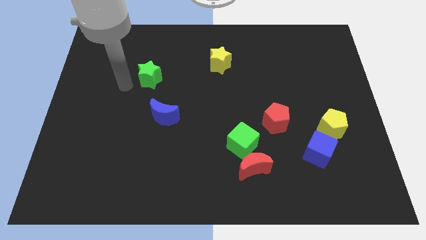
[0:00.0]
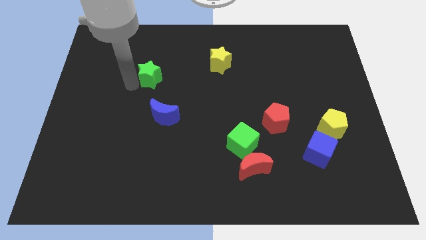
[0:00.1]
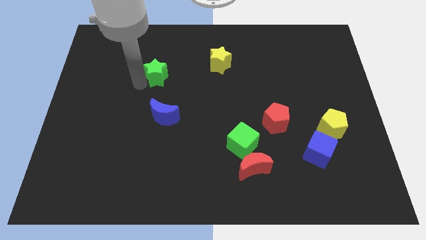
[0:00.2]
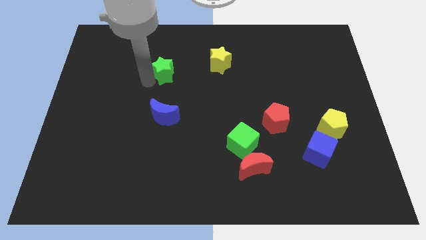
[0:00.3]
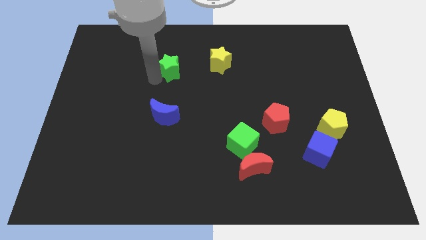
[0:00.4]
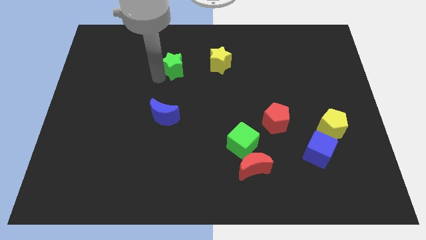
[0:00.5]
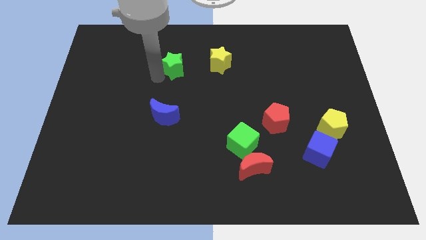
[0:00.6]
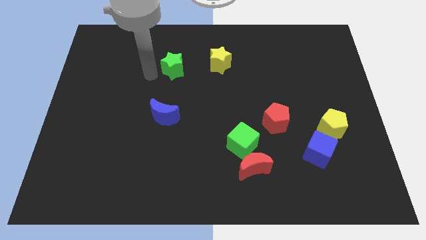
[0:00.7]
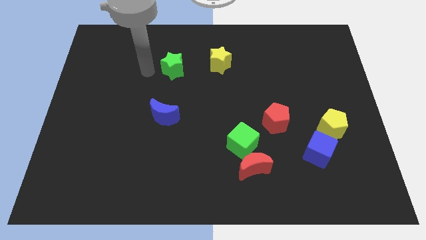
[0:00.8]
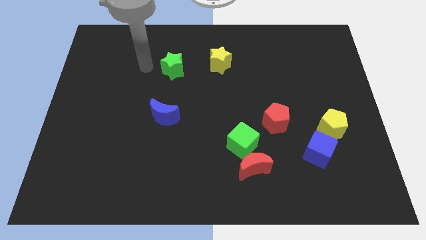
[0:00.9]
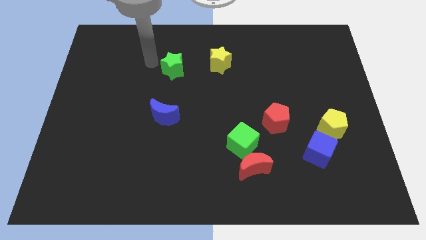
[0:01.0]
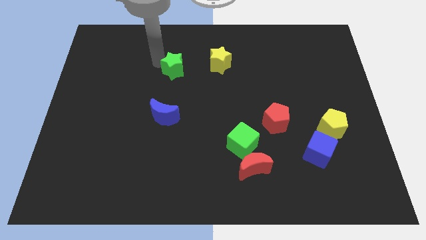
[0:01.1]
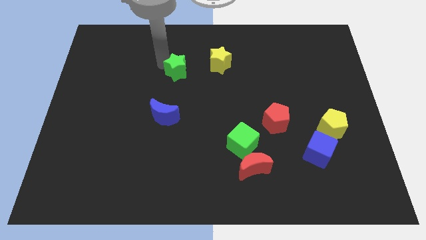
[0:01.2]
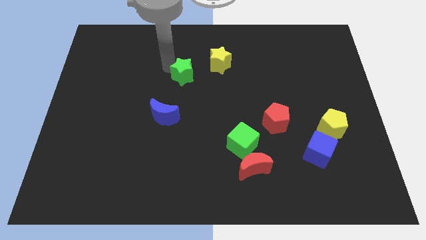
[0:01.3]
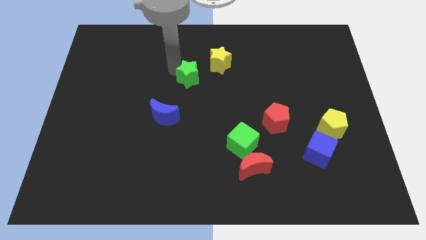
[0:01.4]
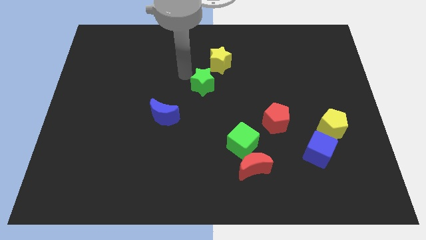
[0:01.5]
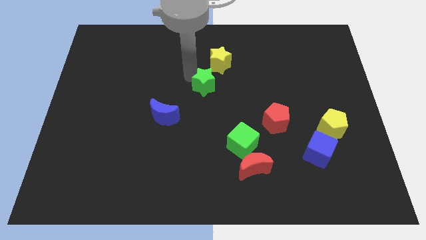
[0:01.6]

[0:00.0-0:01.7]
move the green star in between blue crescent and yellow star

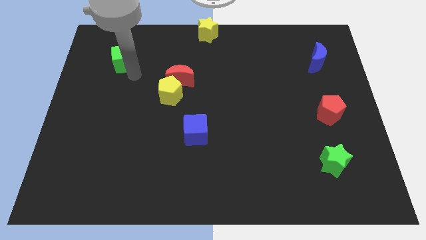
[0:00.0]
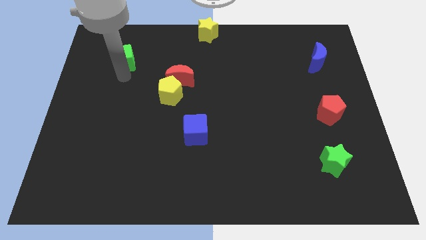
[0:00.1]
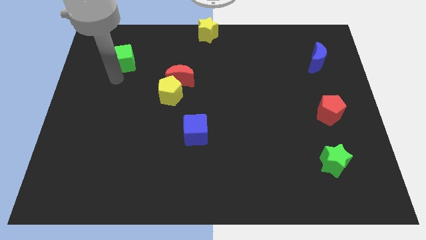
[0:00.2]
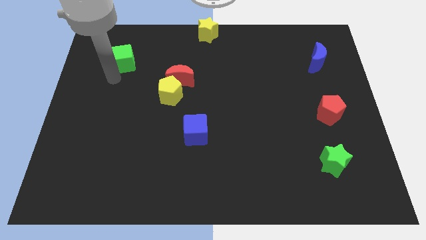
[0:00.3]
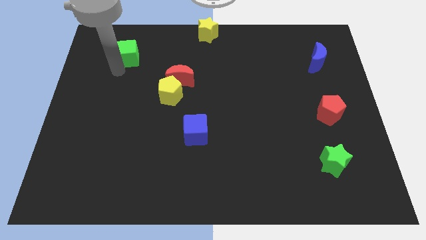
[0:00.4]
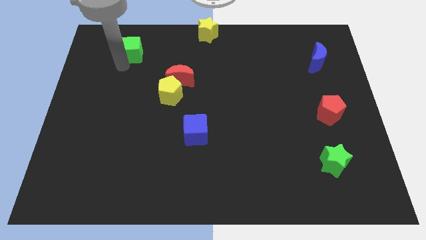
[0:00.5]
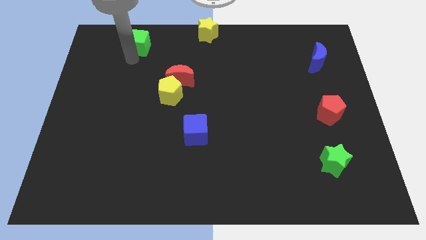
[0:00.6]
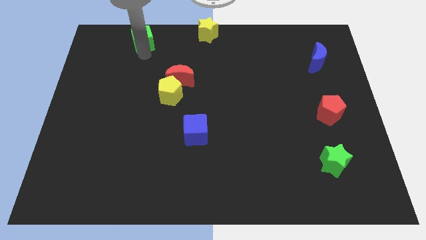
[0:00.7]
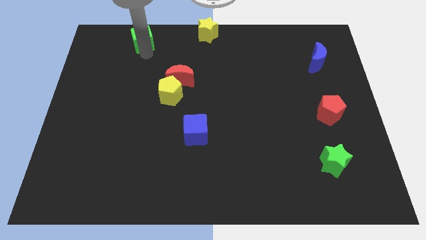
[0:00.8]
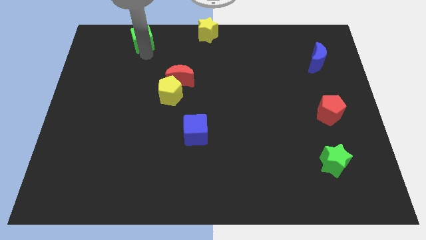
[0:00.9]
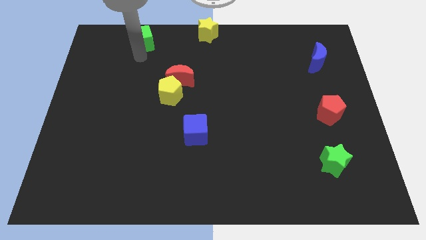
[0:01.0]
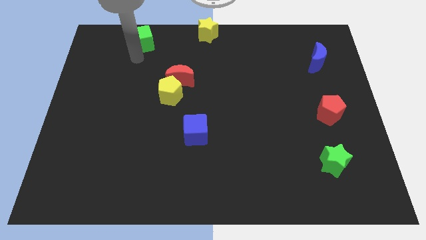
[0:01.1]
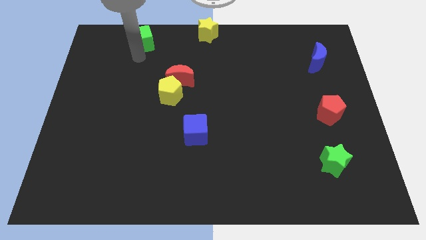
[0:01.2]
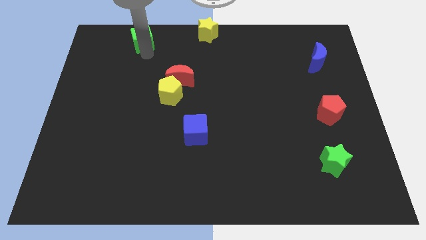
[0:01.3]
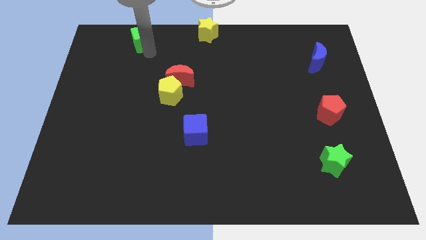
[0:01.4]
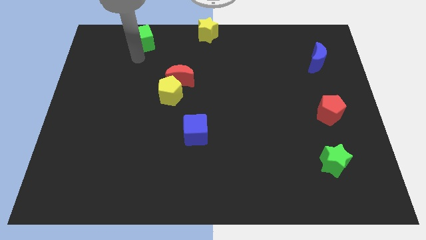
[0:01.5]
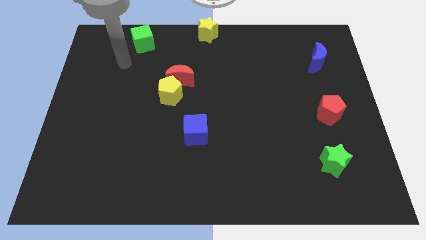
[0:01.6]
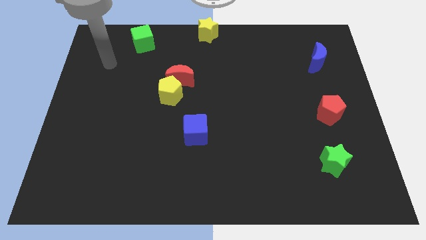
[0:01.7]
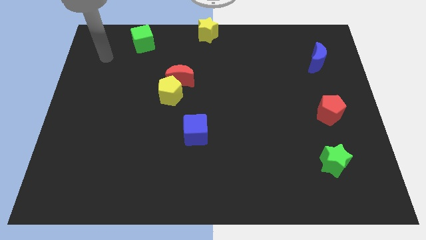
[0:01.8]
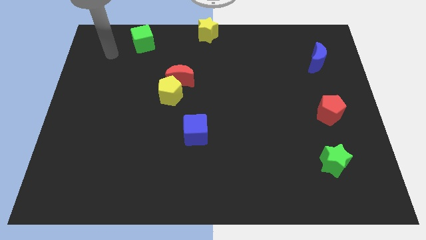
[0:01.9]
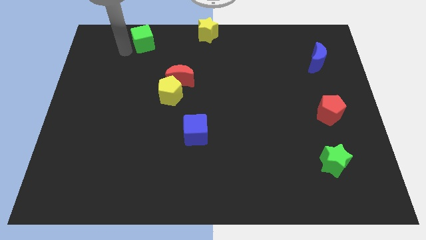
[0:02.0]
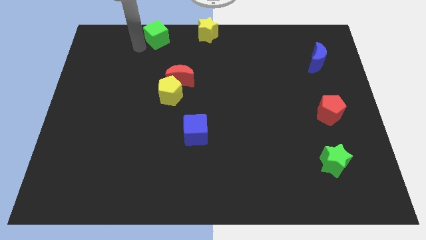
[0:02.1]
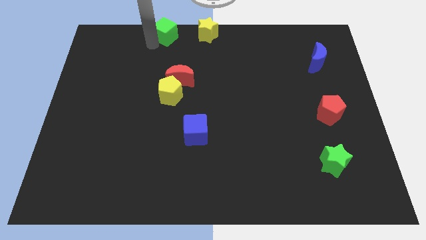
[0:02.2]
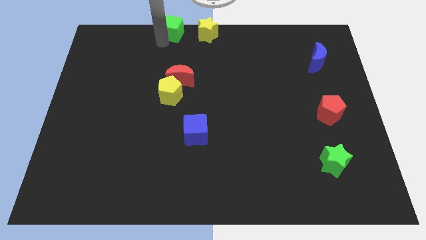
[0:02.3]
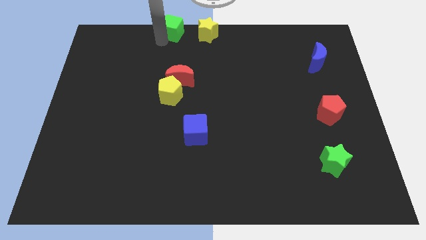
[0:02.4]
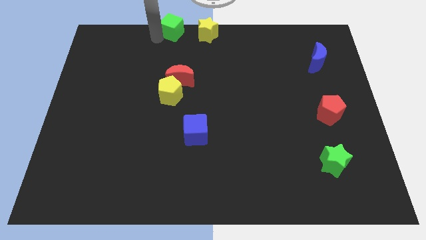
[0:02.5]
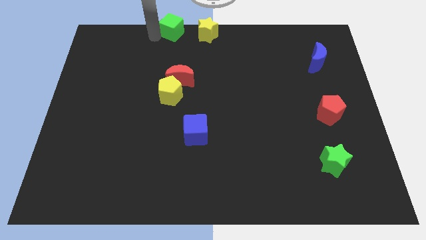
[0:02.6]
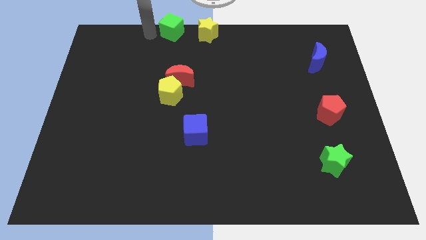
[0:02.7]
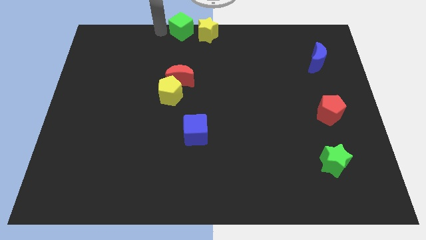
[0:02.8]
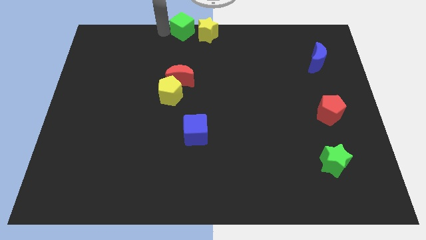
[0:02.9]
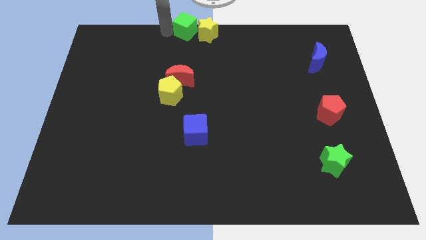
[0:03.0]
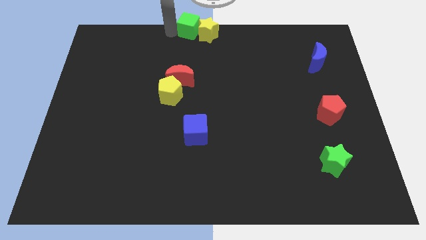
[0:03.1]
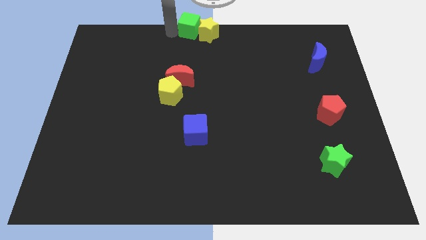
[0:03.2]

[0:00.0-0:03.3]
put the green cube vertically above the red moon

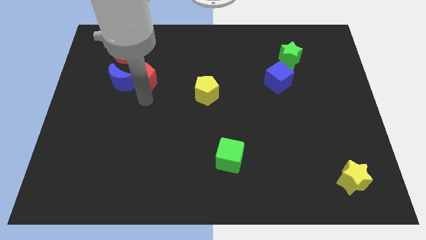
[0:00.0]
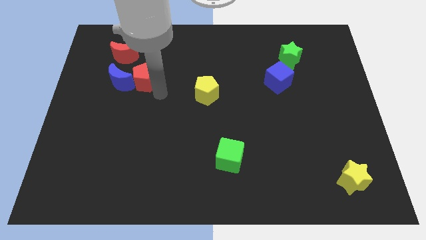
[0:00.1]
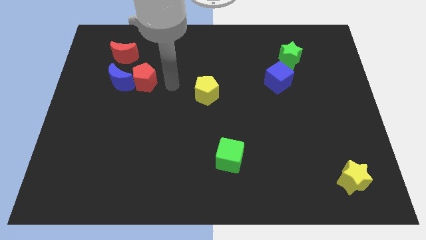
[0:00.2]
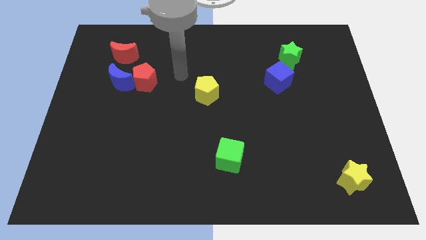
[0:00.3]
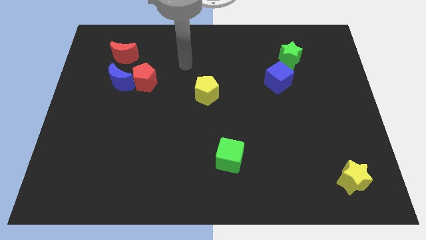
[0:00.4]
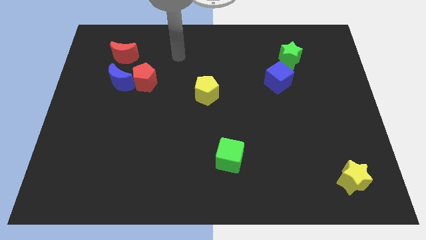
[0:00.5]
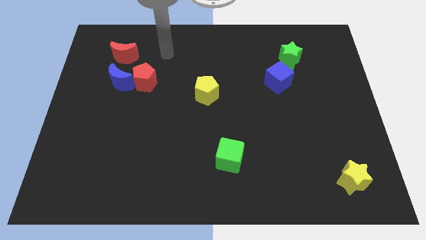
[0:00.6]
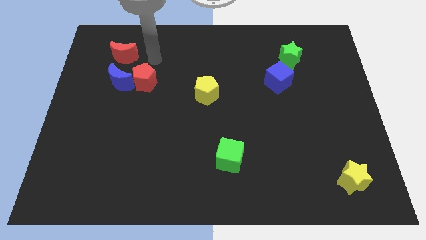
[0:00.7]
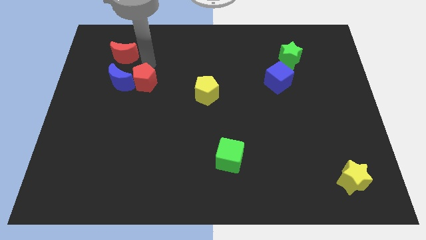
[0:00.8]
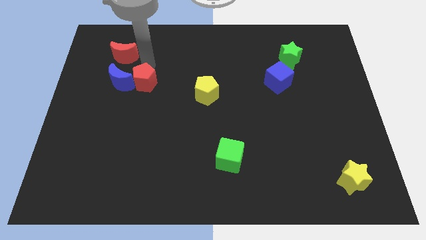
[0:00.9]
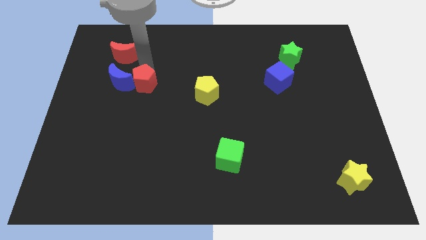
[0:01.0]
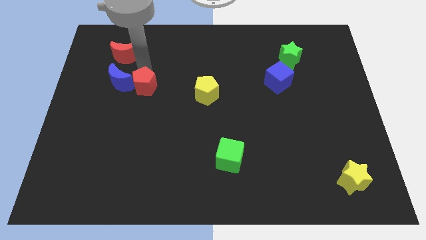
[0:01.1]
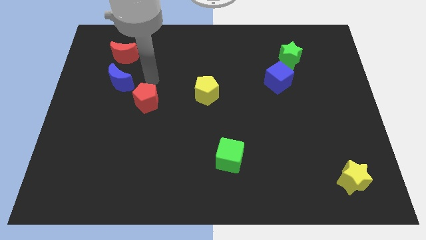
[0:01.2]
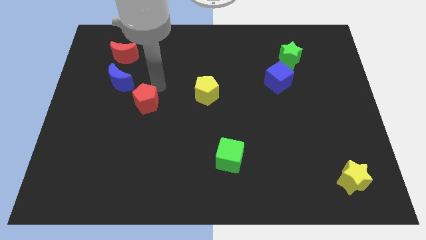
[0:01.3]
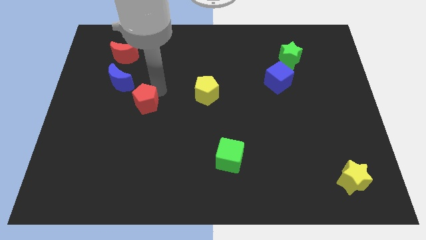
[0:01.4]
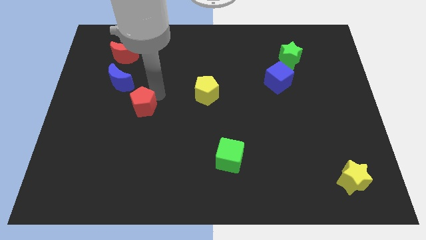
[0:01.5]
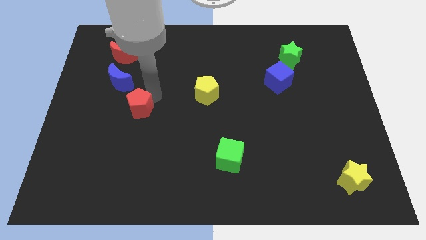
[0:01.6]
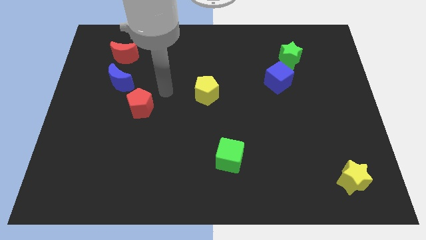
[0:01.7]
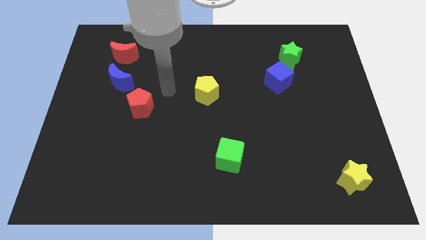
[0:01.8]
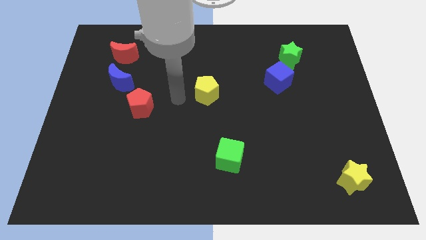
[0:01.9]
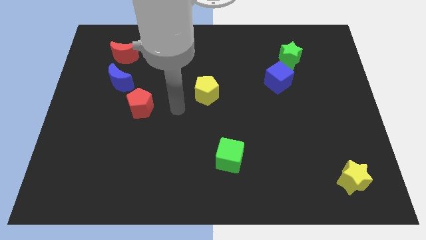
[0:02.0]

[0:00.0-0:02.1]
slightly push the red pentagon downwards

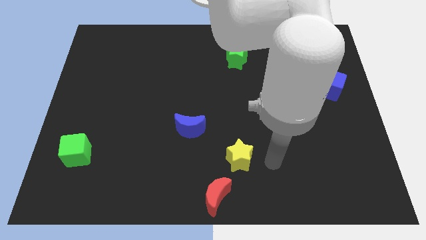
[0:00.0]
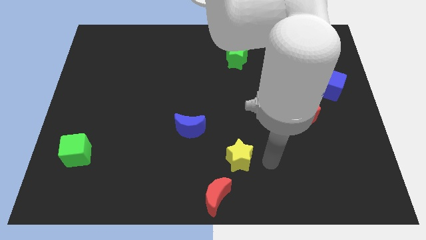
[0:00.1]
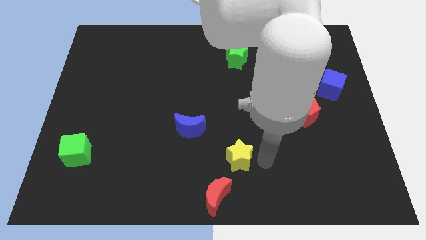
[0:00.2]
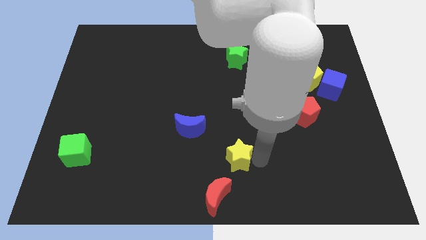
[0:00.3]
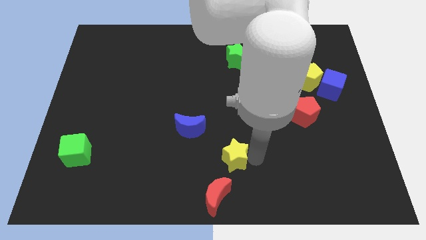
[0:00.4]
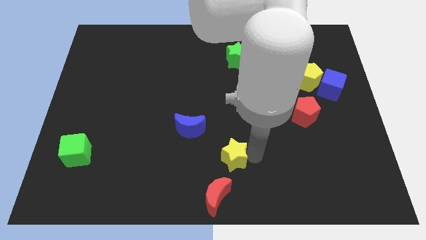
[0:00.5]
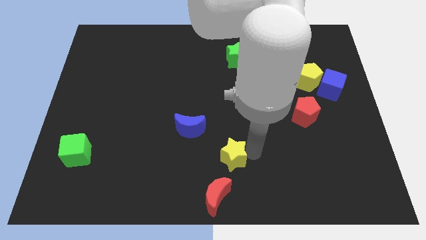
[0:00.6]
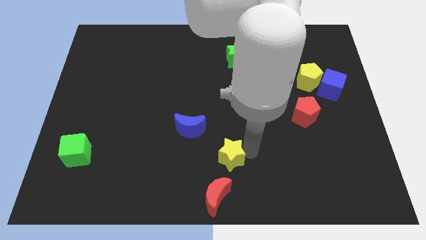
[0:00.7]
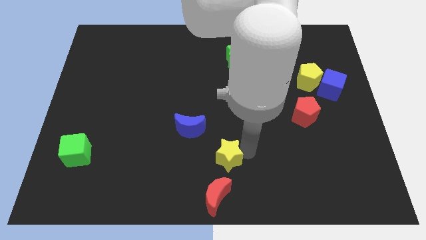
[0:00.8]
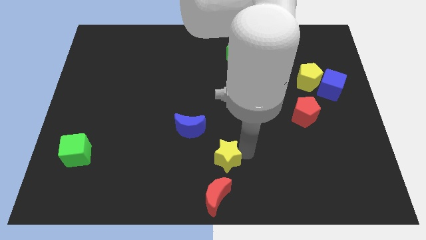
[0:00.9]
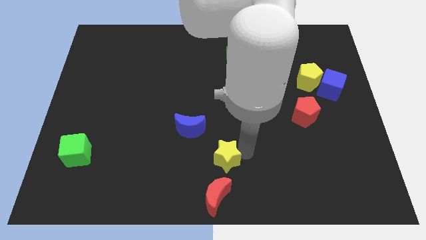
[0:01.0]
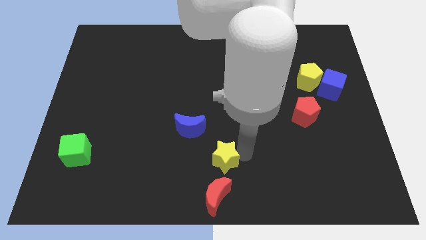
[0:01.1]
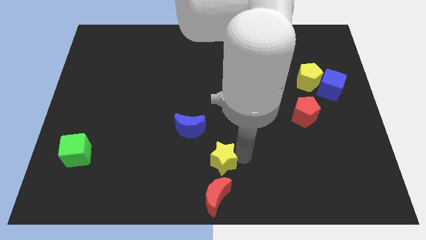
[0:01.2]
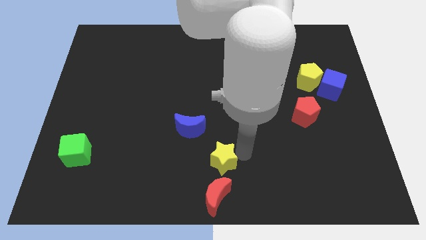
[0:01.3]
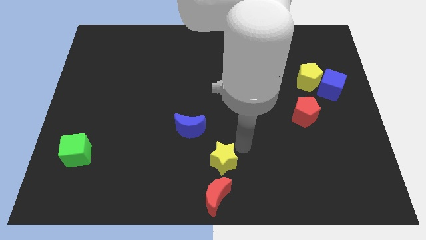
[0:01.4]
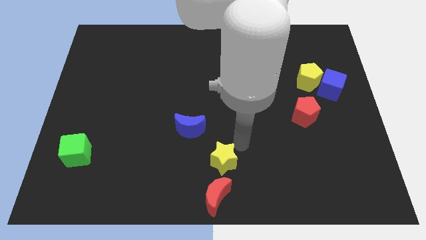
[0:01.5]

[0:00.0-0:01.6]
place the yellow star above the red crescent

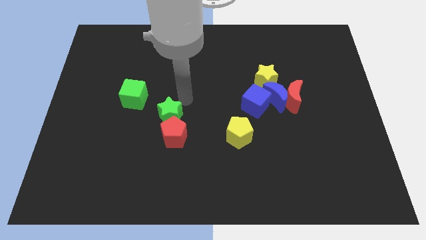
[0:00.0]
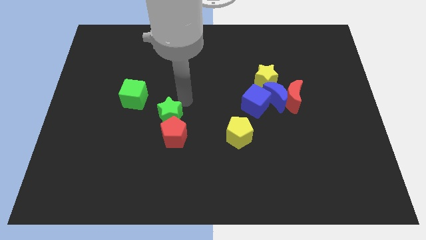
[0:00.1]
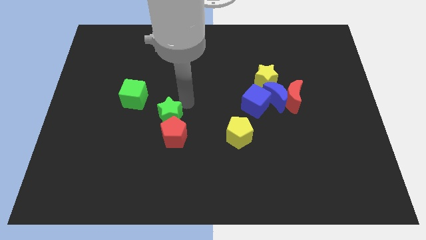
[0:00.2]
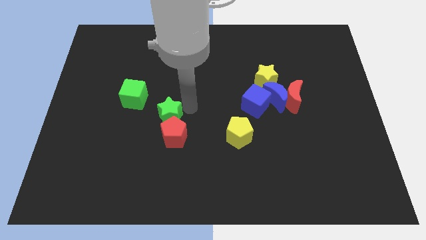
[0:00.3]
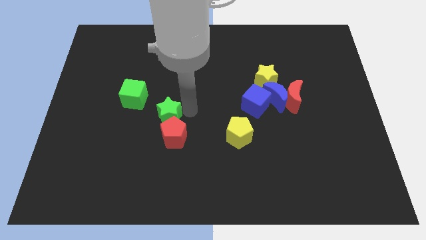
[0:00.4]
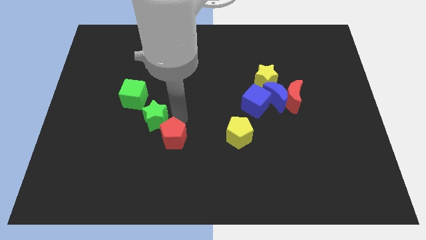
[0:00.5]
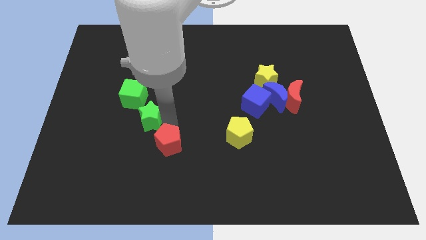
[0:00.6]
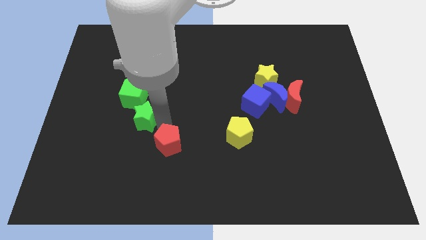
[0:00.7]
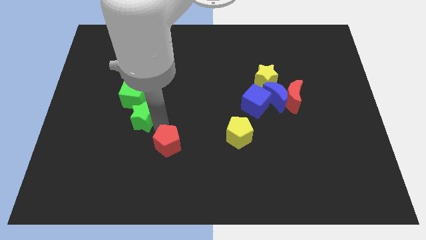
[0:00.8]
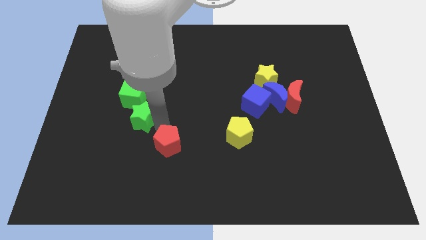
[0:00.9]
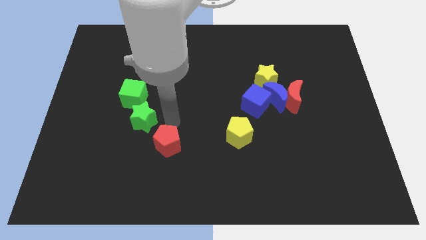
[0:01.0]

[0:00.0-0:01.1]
separate green star and red pentagon from each other
